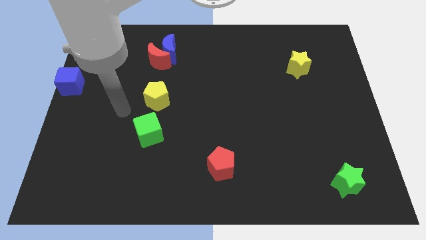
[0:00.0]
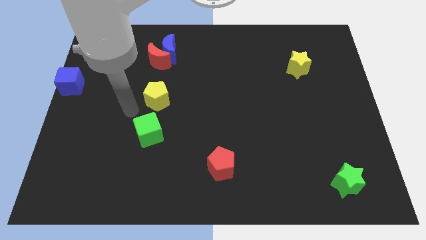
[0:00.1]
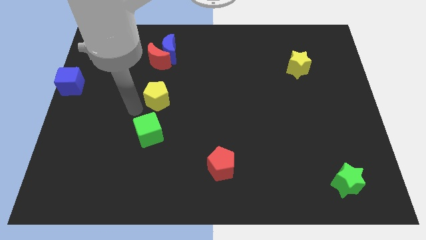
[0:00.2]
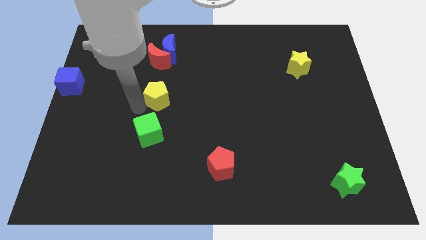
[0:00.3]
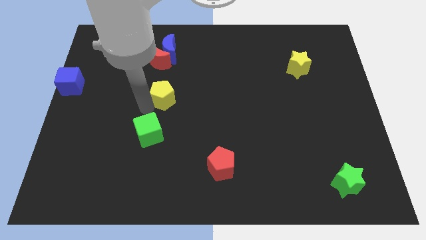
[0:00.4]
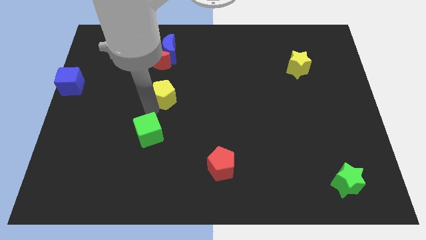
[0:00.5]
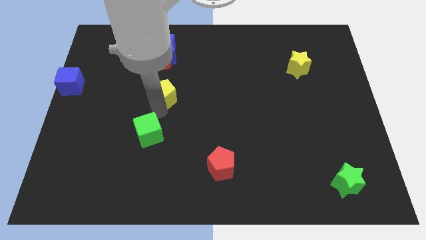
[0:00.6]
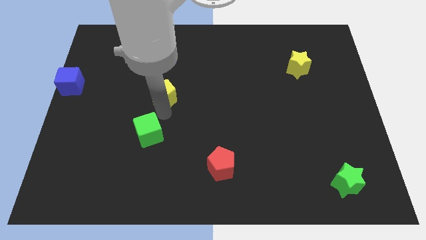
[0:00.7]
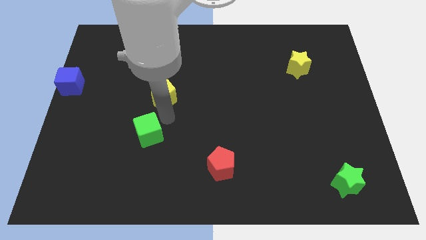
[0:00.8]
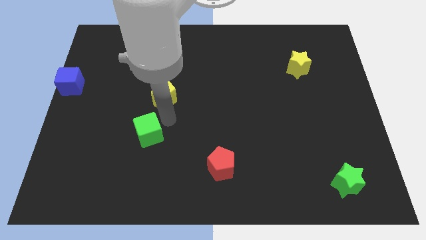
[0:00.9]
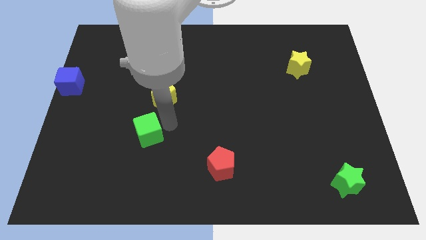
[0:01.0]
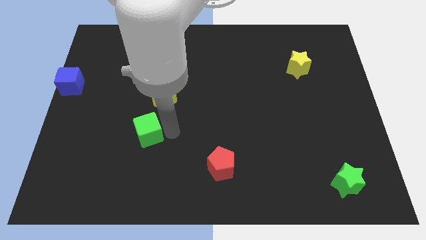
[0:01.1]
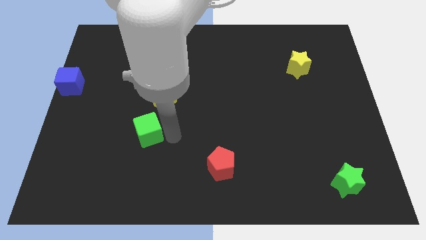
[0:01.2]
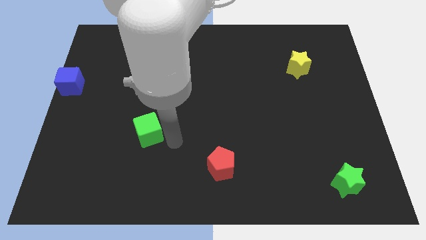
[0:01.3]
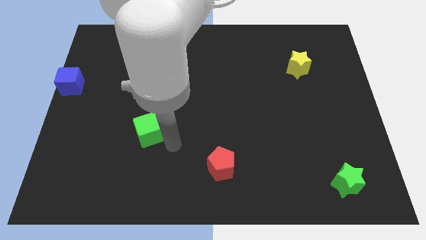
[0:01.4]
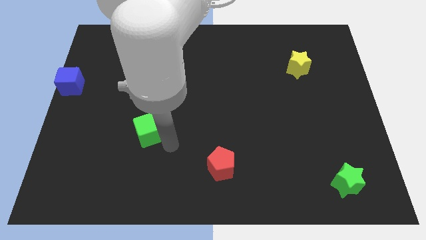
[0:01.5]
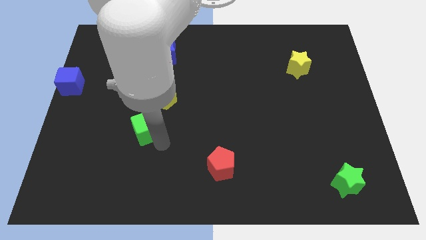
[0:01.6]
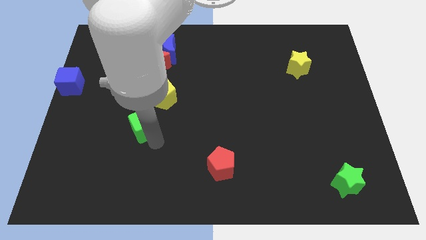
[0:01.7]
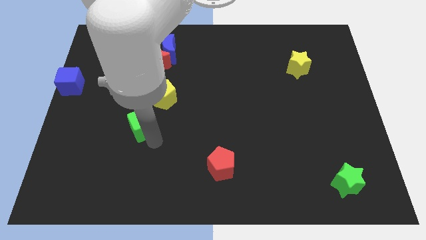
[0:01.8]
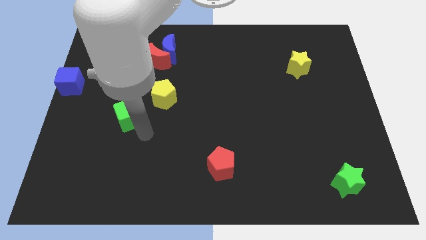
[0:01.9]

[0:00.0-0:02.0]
move green cube slightly up

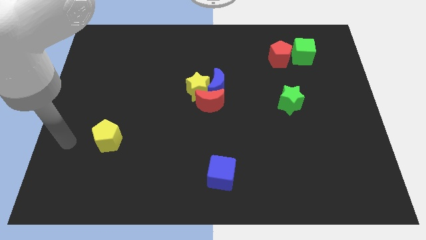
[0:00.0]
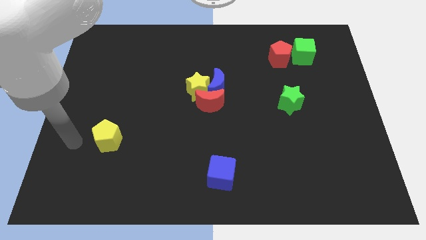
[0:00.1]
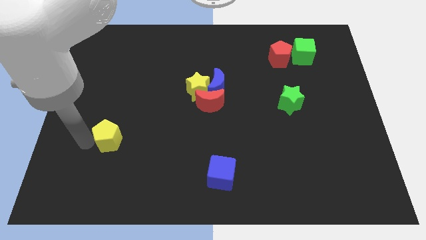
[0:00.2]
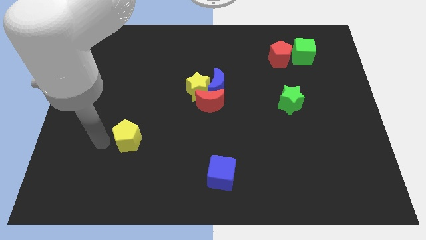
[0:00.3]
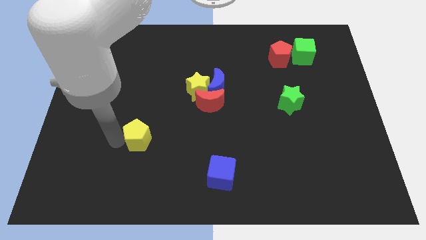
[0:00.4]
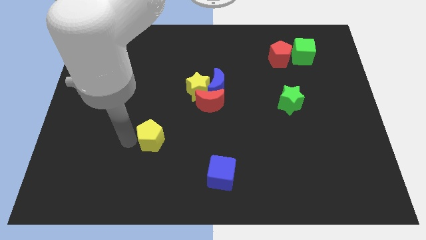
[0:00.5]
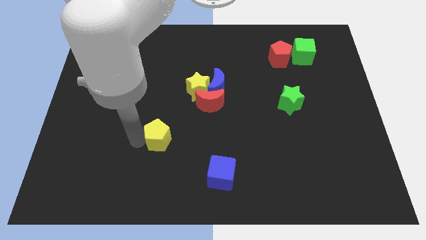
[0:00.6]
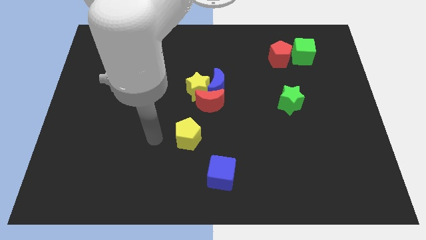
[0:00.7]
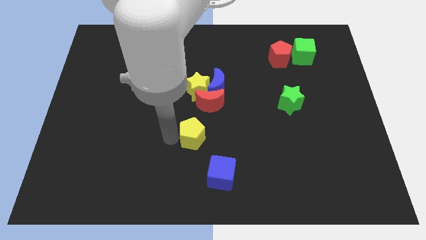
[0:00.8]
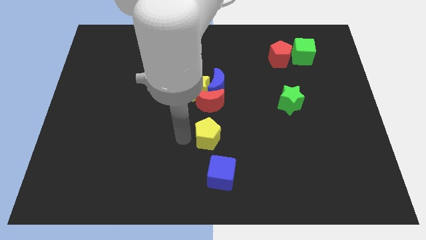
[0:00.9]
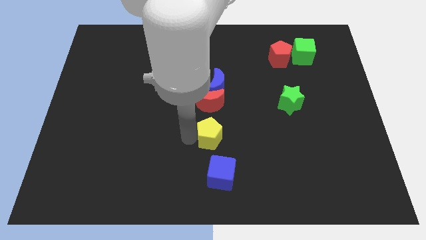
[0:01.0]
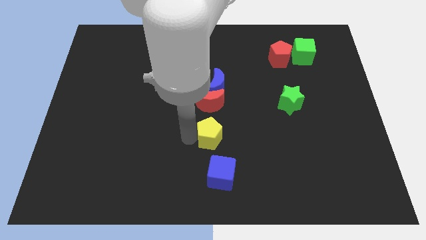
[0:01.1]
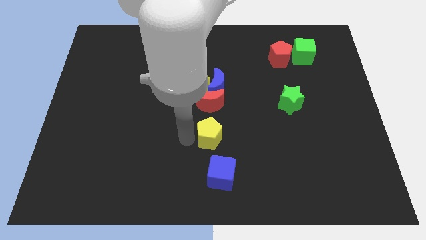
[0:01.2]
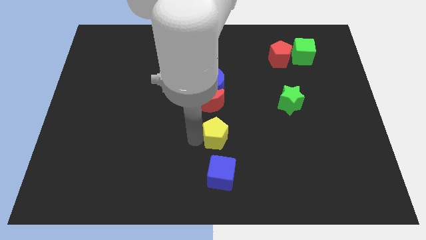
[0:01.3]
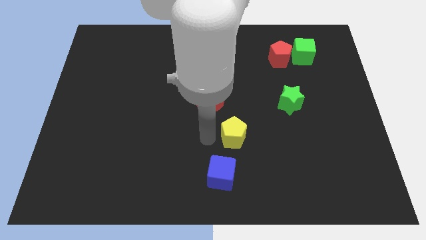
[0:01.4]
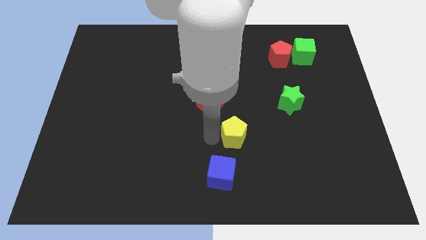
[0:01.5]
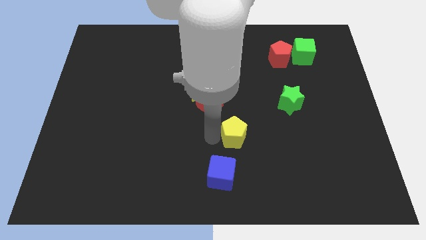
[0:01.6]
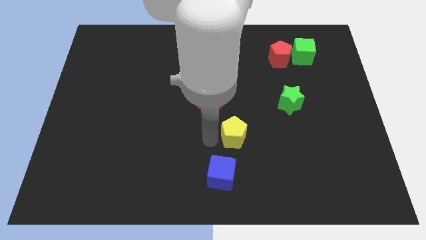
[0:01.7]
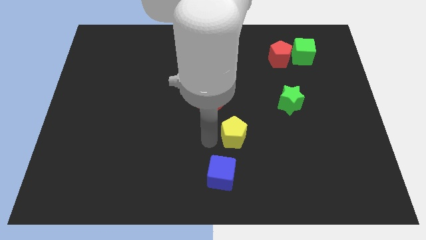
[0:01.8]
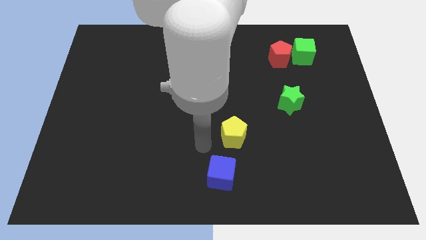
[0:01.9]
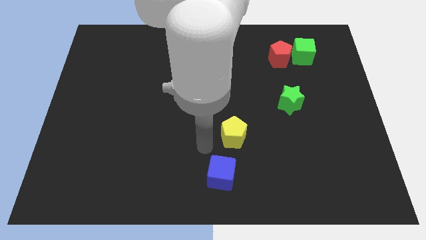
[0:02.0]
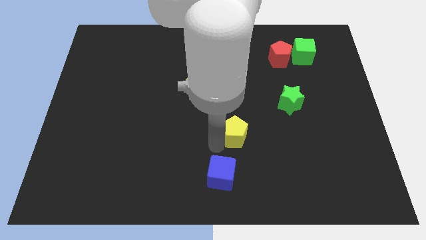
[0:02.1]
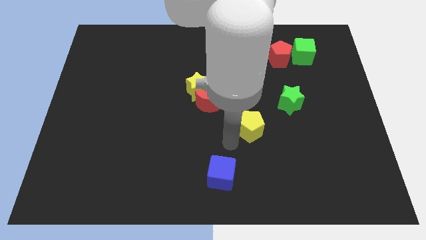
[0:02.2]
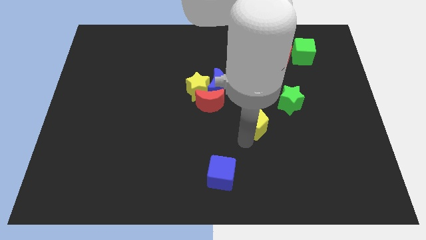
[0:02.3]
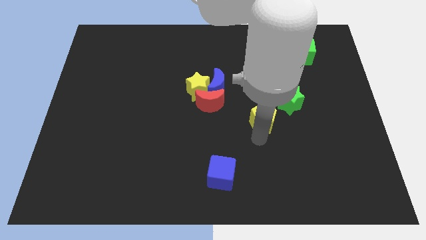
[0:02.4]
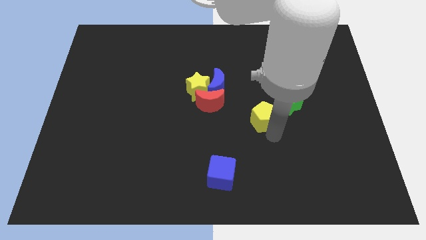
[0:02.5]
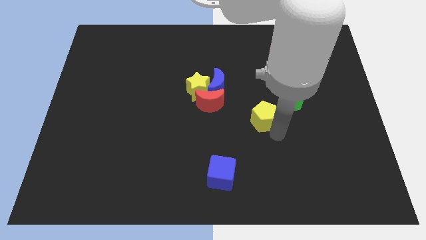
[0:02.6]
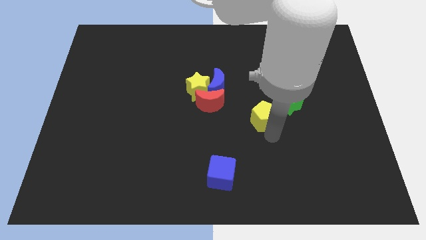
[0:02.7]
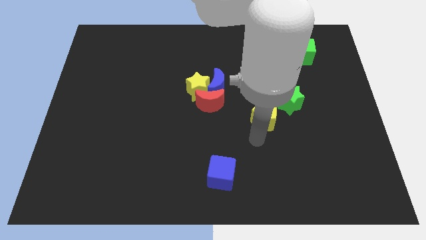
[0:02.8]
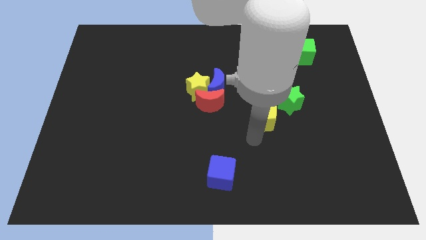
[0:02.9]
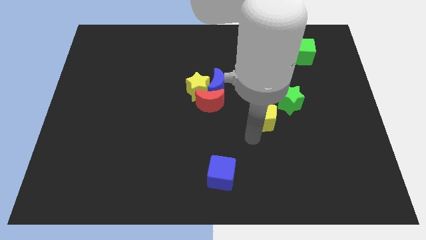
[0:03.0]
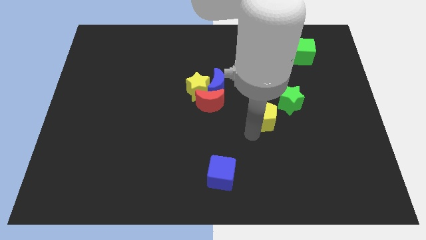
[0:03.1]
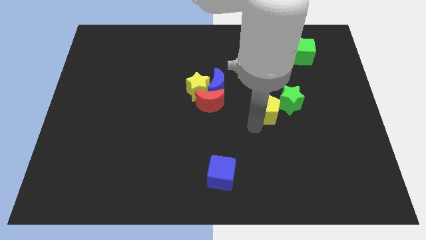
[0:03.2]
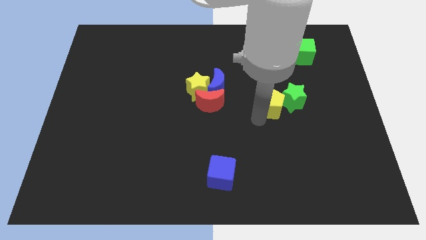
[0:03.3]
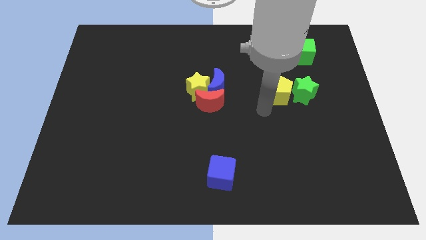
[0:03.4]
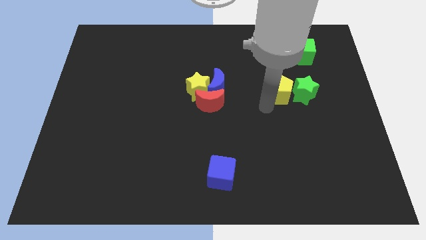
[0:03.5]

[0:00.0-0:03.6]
take the yellow pentagon into the left side of the green star

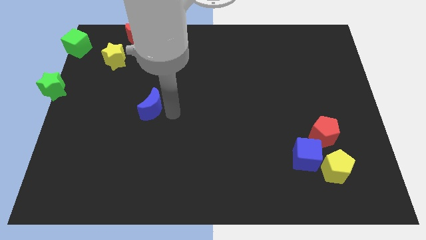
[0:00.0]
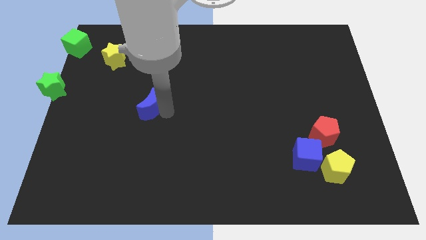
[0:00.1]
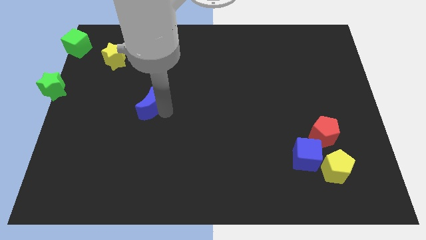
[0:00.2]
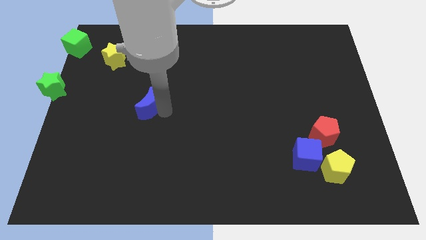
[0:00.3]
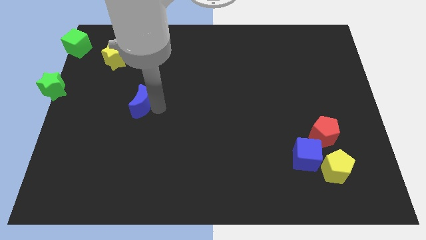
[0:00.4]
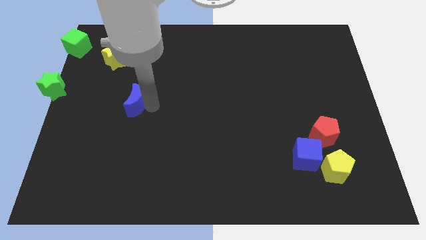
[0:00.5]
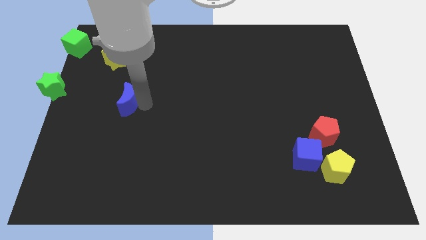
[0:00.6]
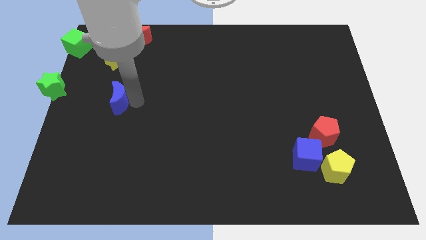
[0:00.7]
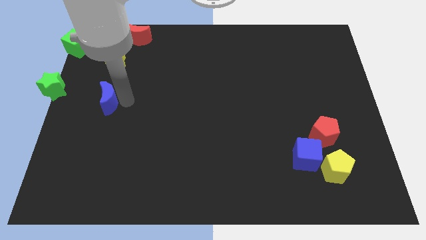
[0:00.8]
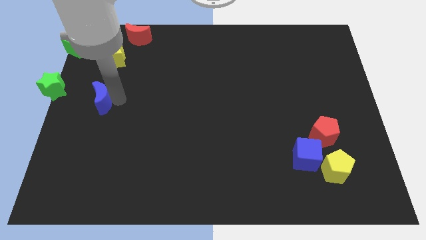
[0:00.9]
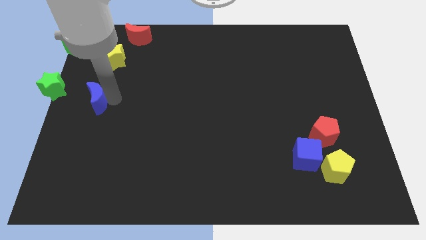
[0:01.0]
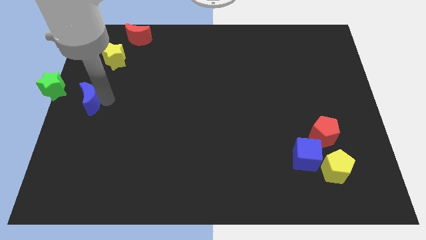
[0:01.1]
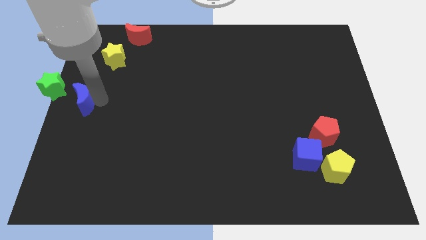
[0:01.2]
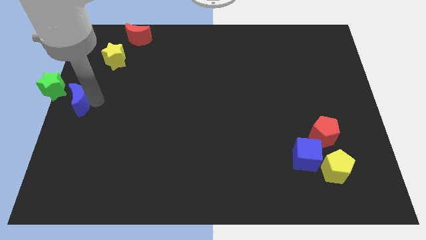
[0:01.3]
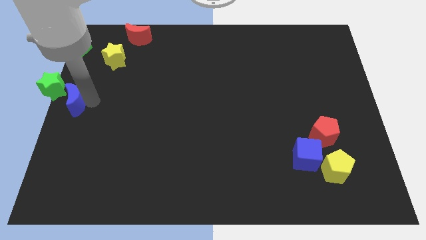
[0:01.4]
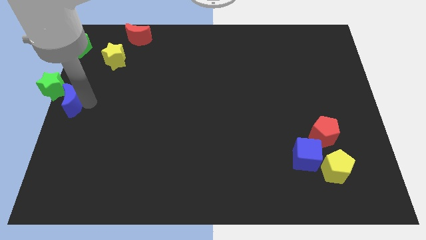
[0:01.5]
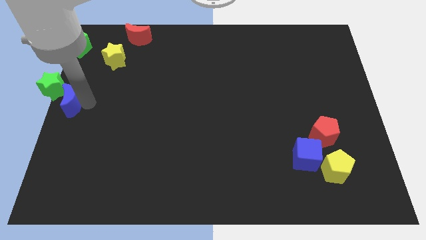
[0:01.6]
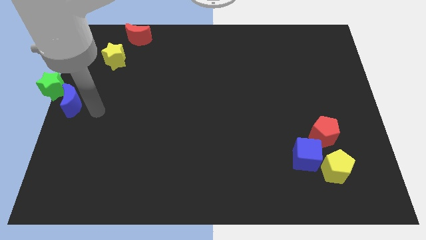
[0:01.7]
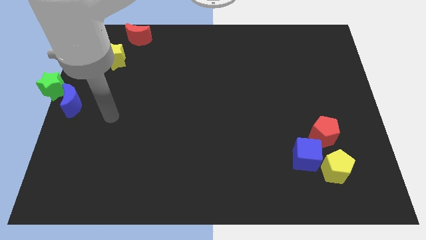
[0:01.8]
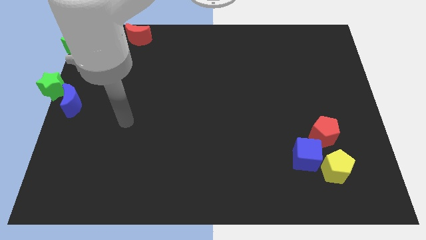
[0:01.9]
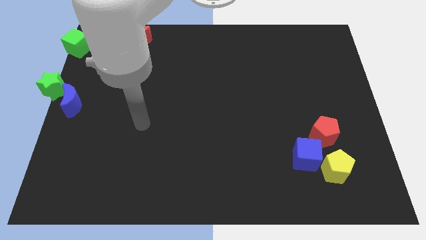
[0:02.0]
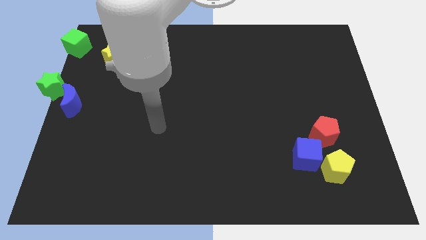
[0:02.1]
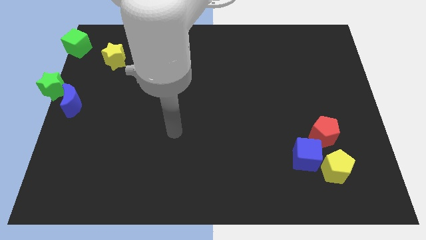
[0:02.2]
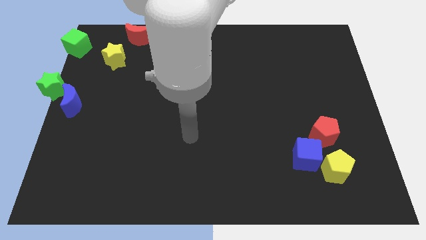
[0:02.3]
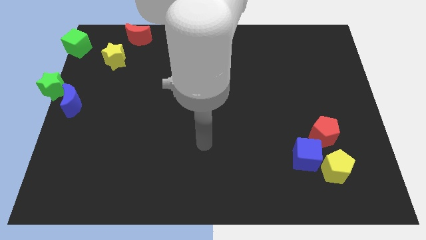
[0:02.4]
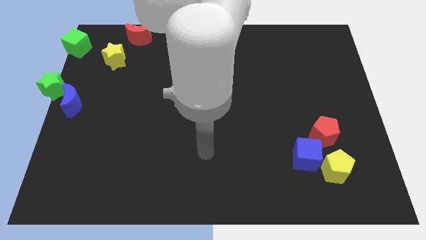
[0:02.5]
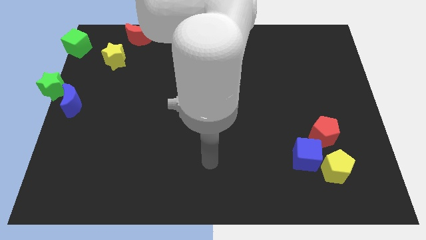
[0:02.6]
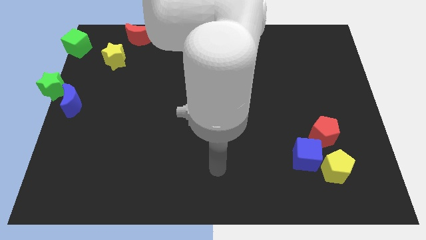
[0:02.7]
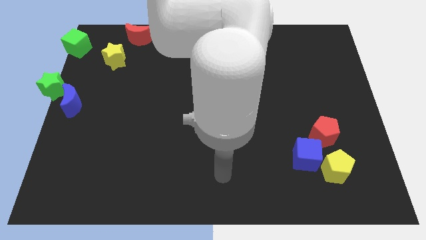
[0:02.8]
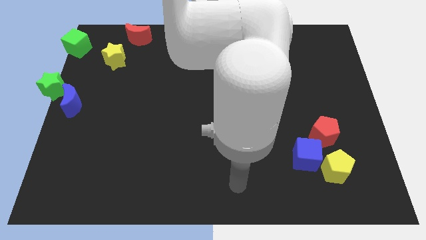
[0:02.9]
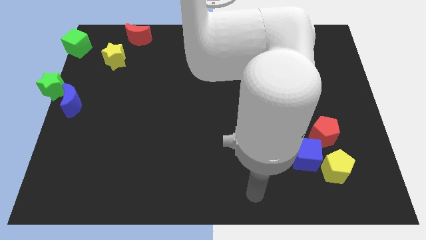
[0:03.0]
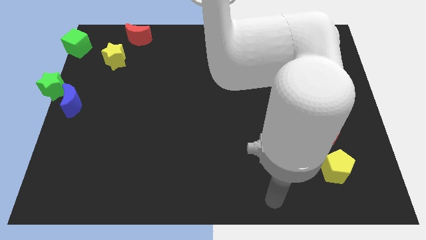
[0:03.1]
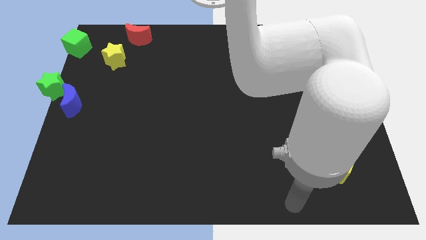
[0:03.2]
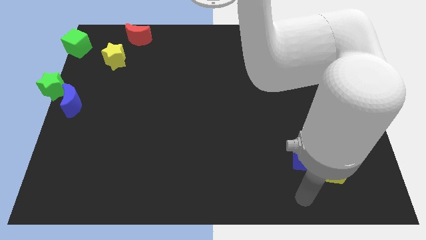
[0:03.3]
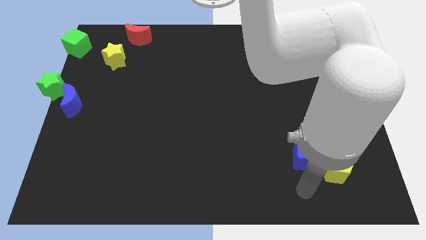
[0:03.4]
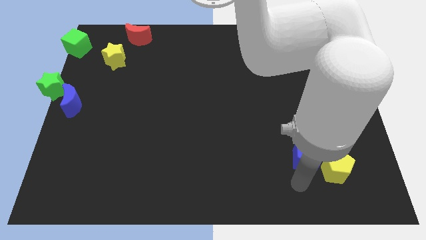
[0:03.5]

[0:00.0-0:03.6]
move blue moon right below the green star
